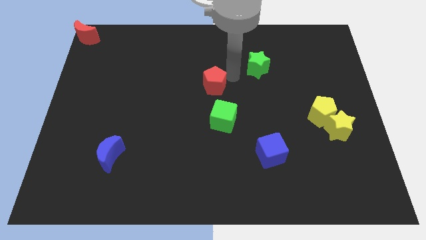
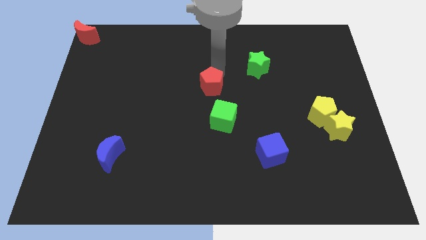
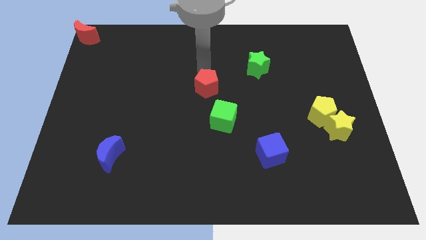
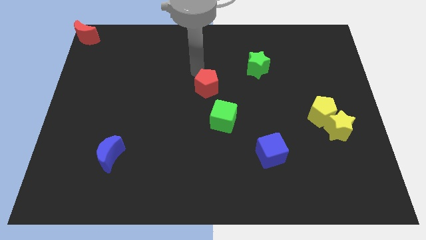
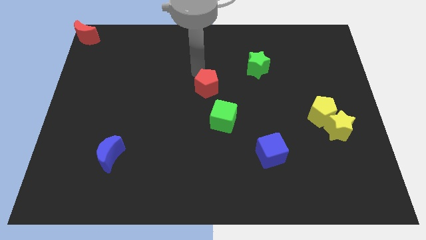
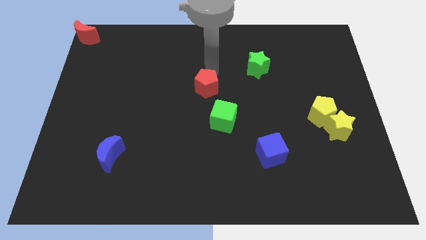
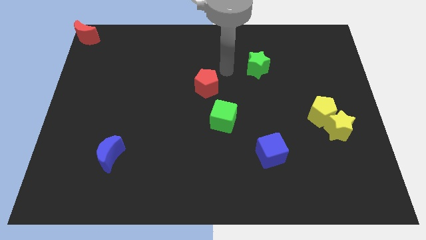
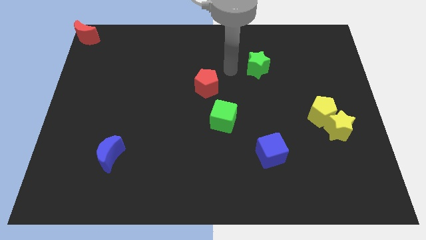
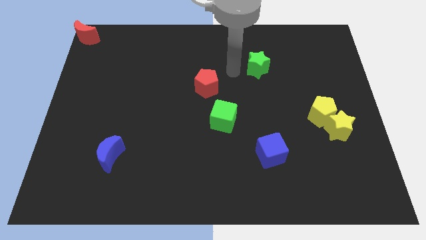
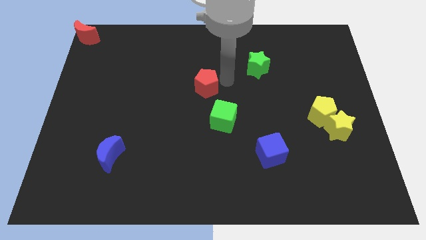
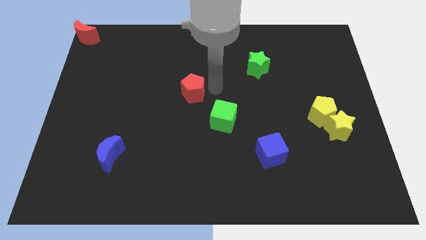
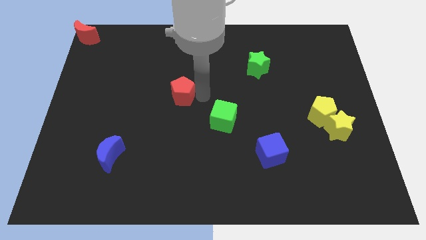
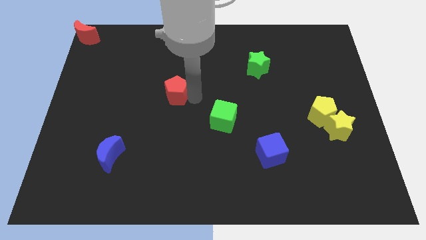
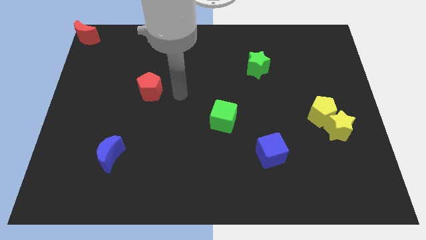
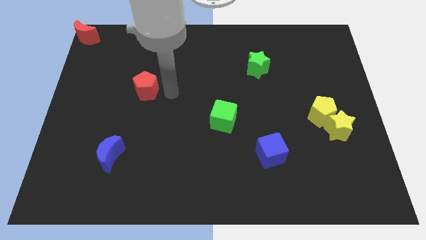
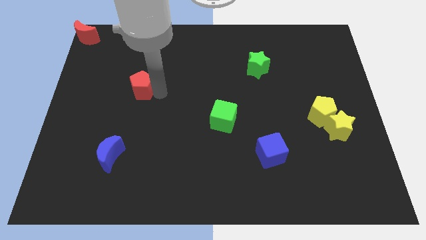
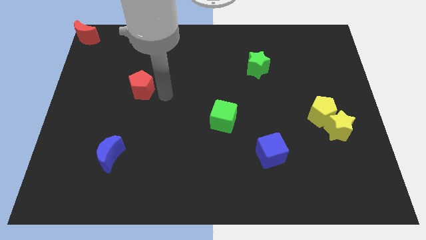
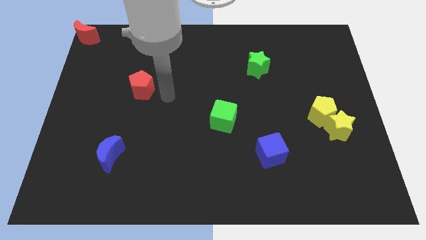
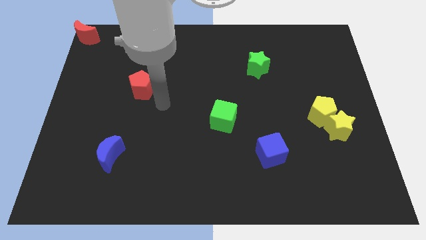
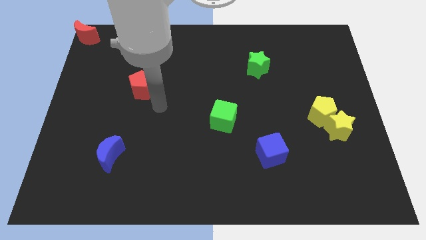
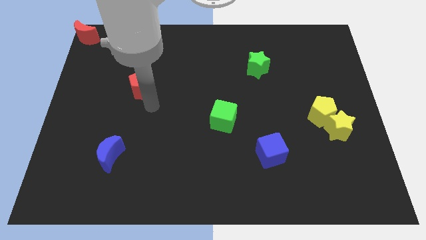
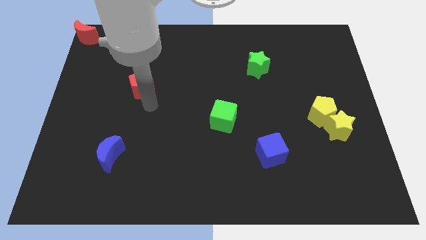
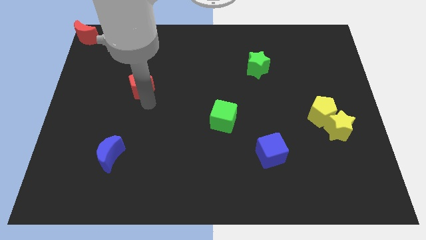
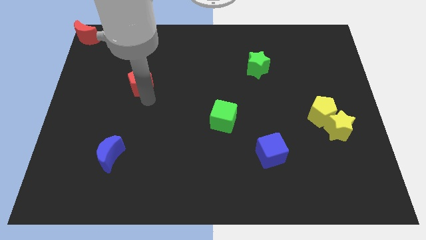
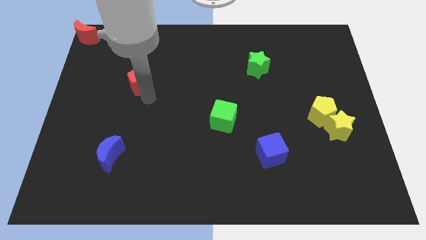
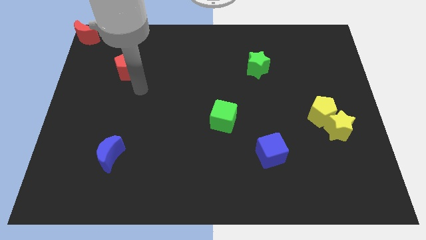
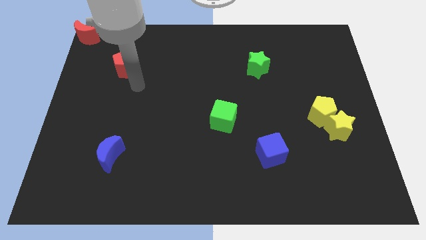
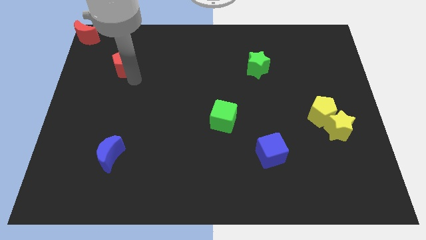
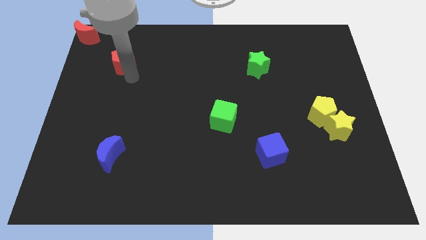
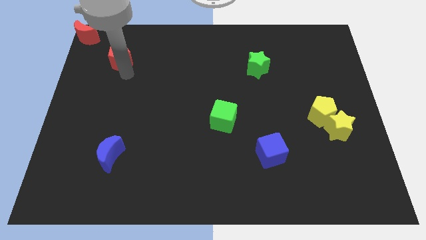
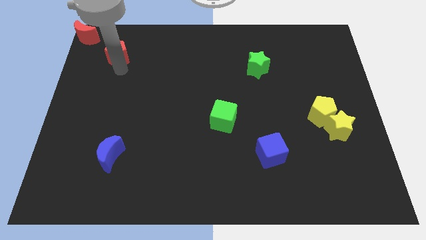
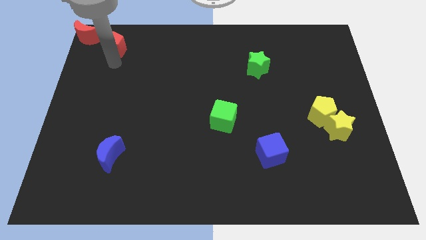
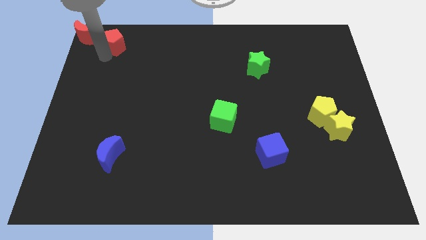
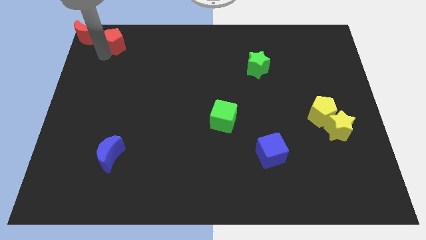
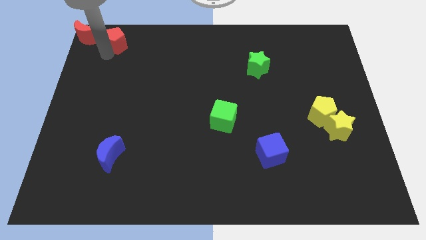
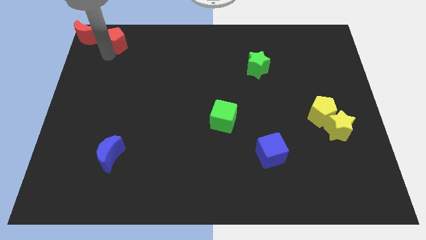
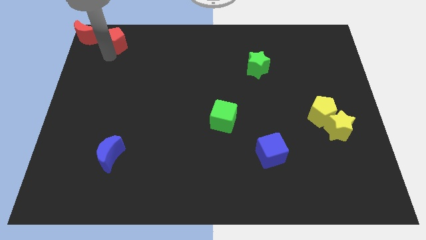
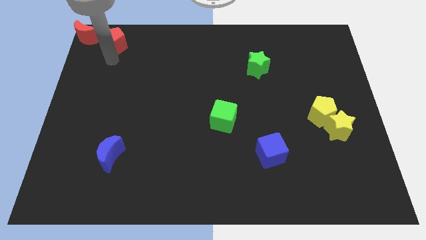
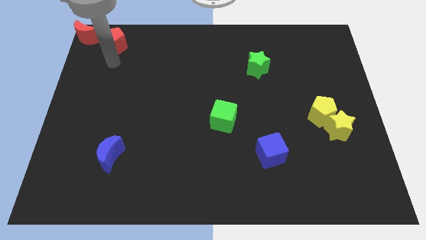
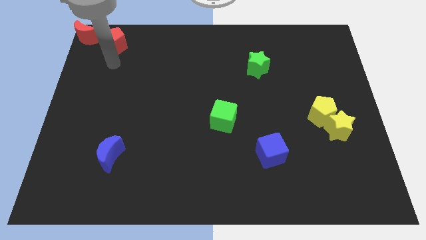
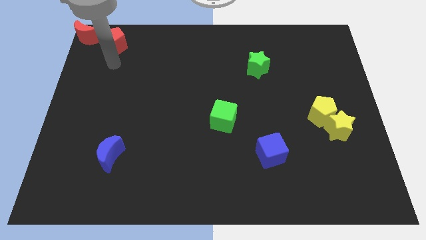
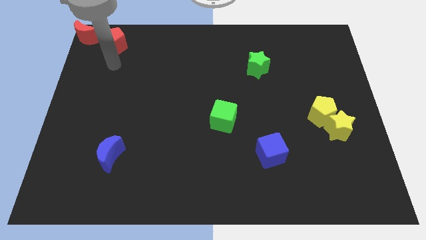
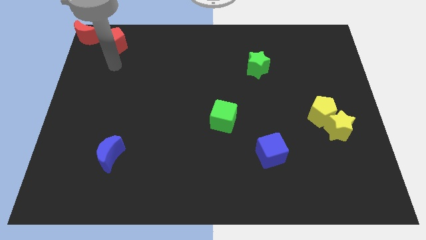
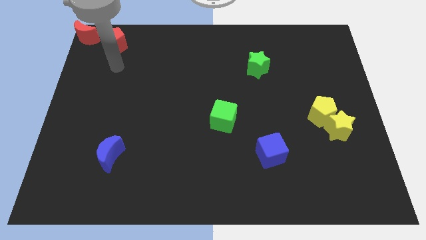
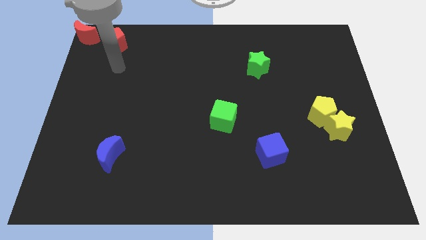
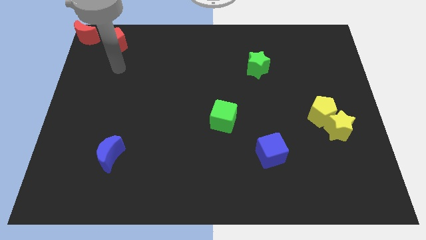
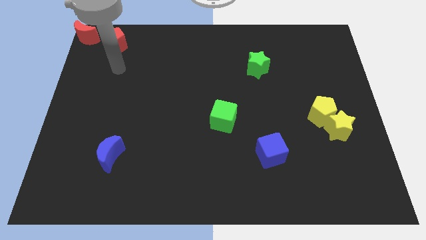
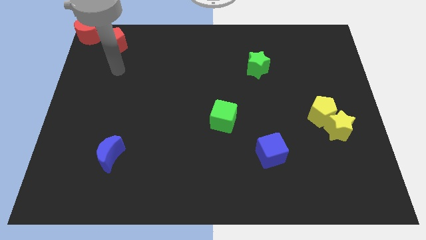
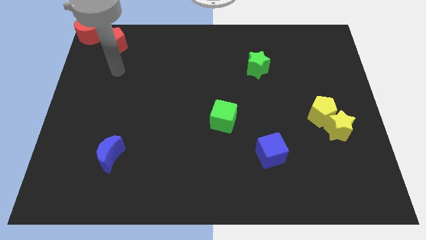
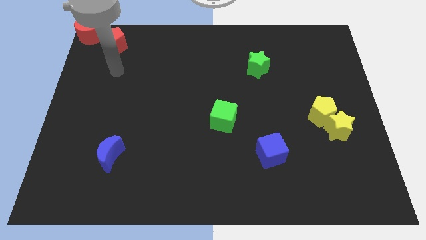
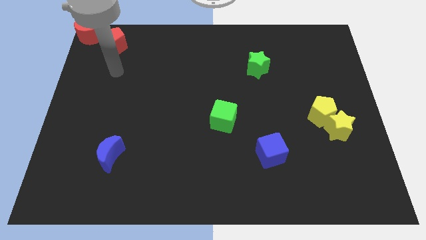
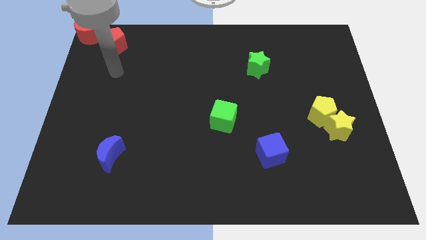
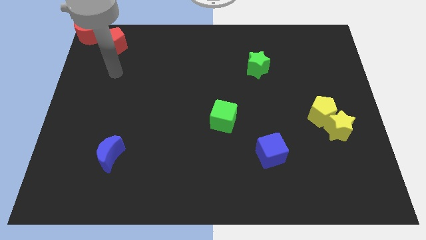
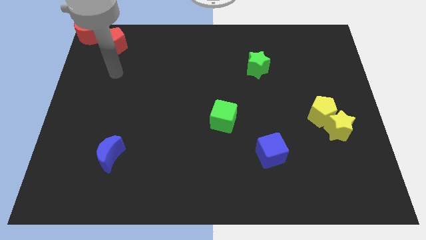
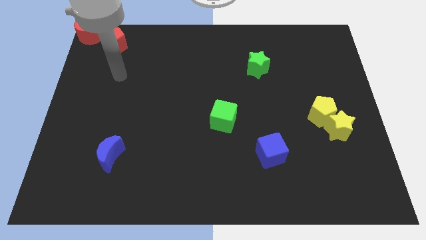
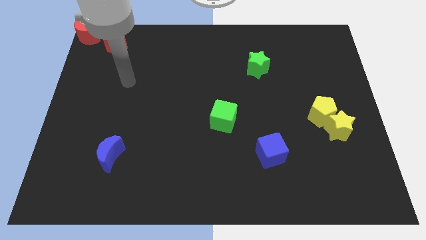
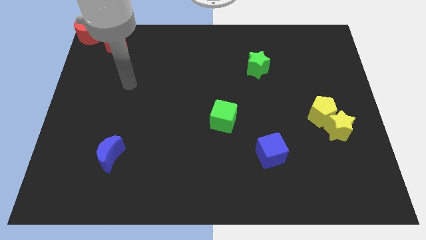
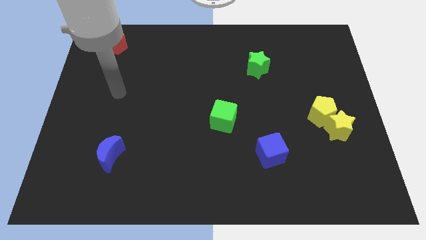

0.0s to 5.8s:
move the red pentagon to the right of the red crescent
